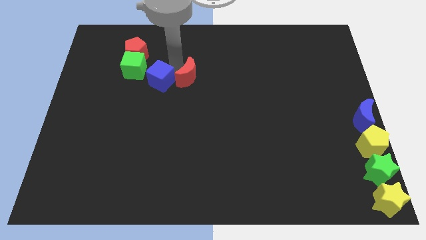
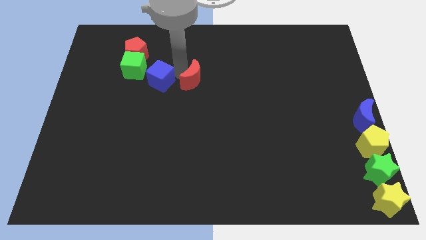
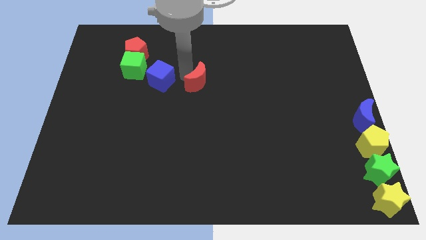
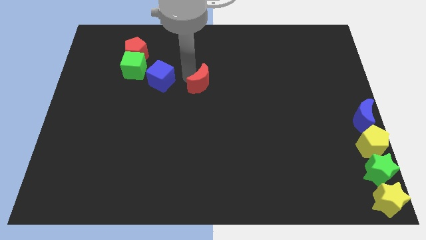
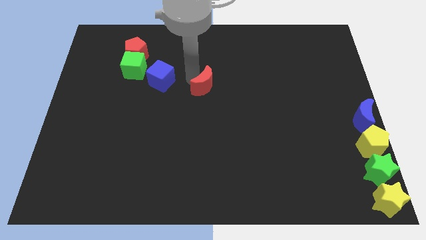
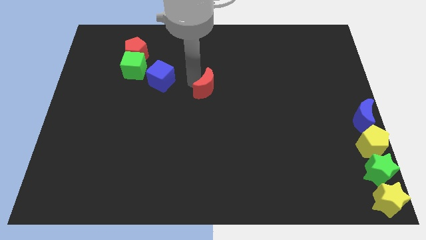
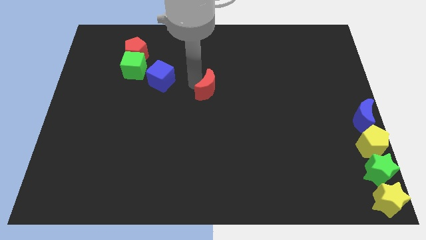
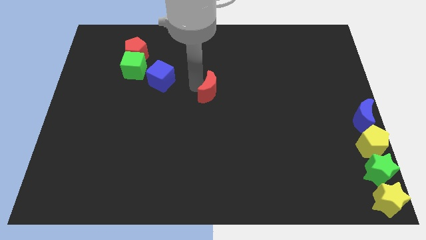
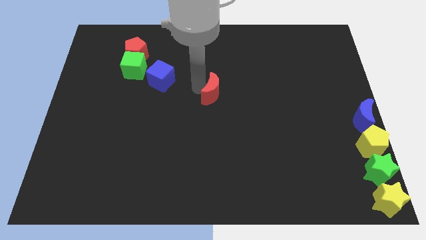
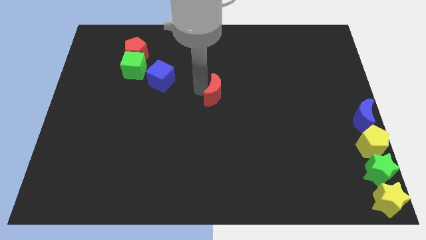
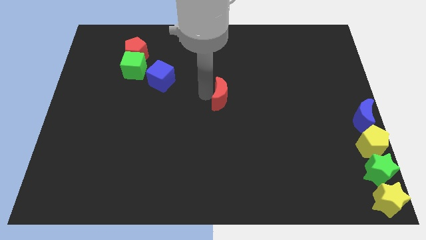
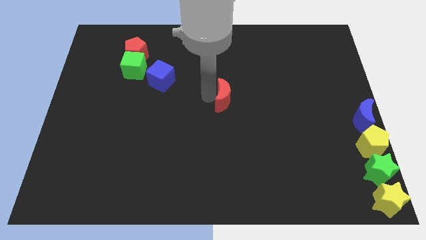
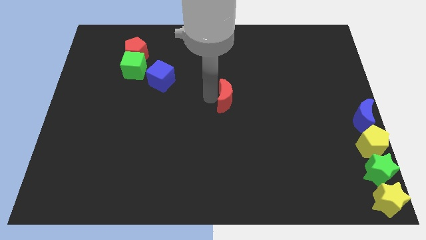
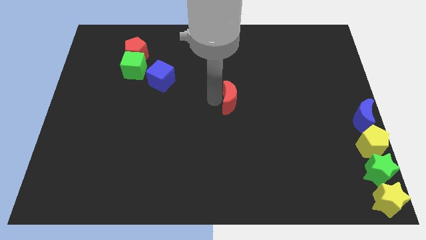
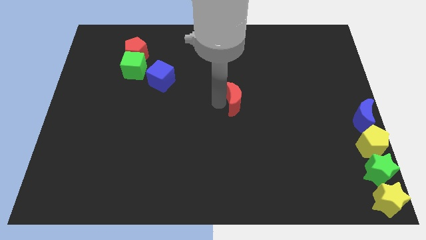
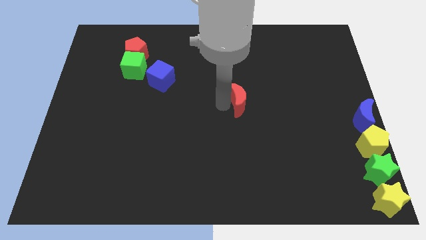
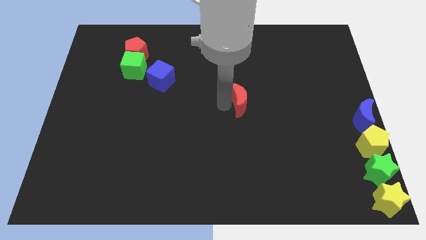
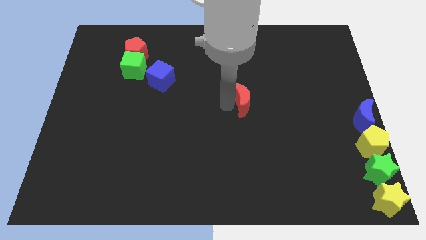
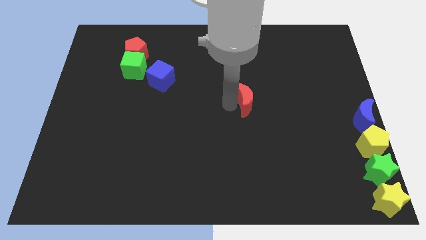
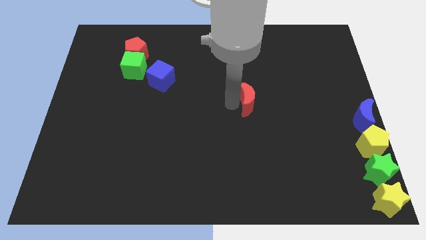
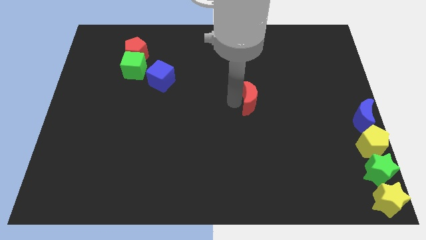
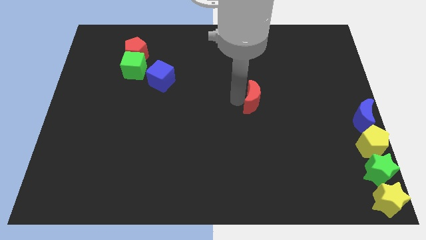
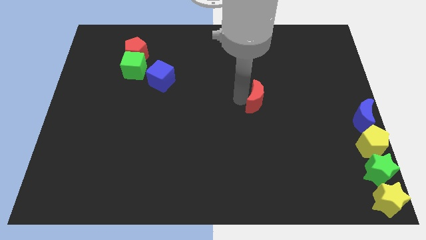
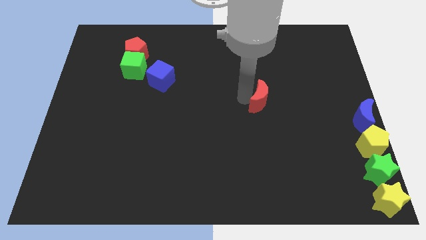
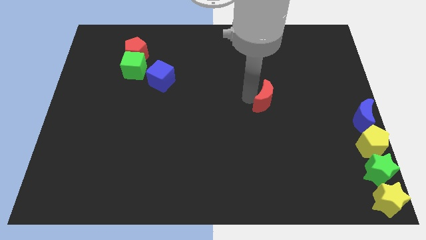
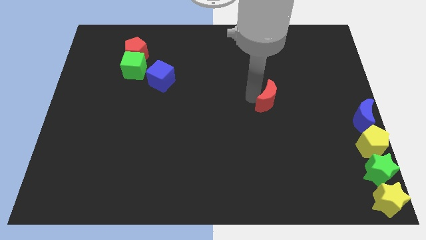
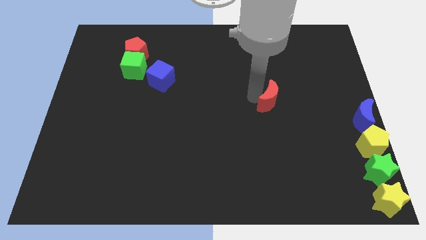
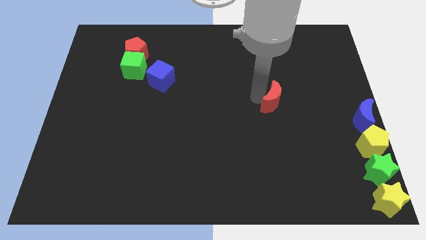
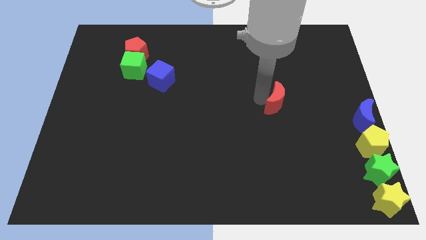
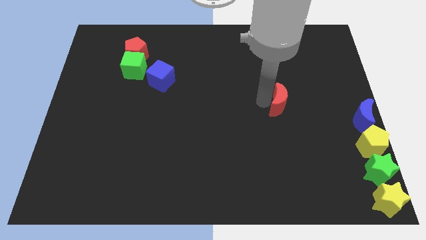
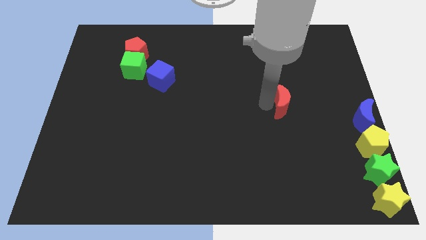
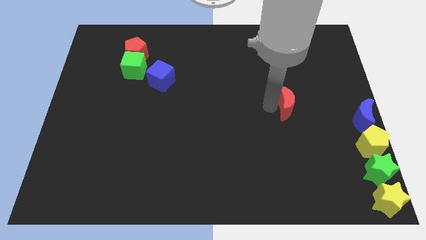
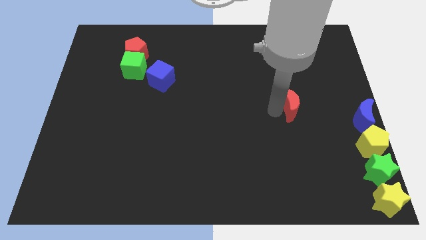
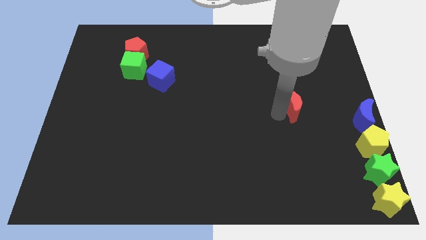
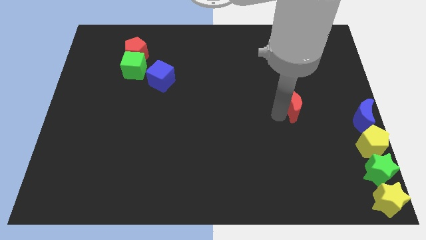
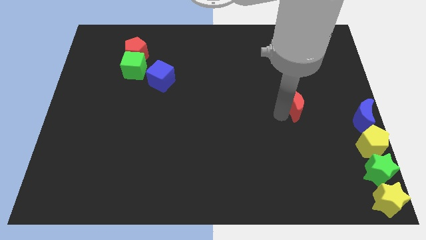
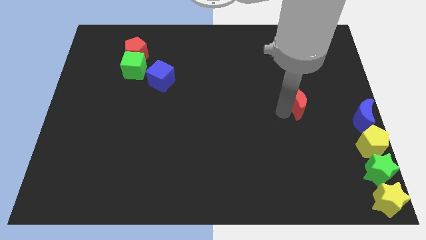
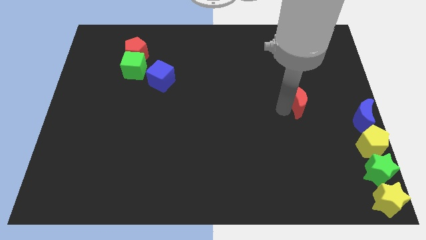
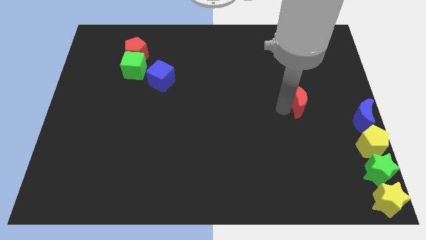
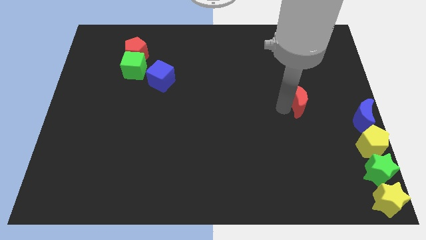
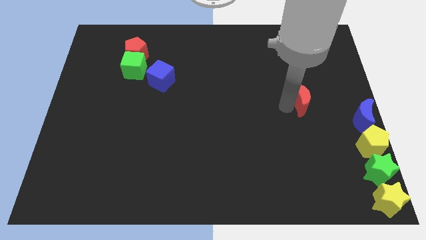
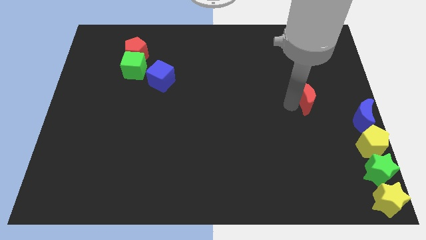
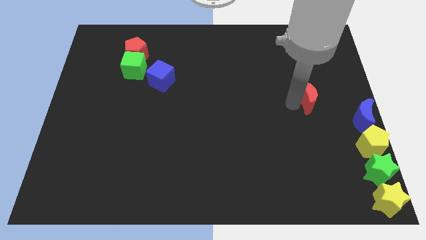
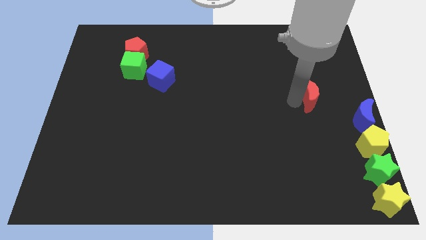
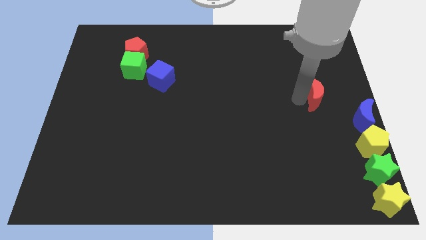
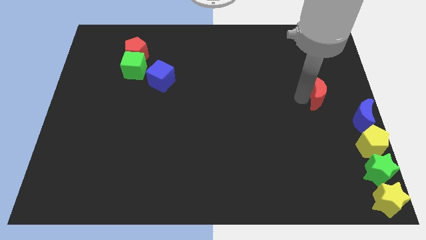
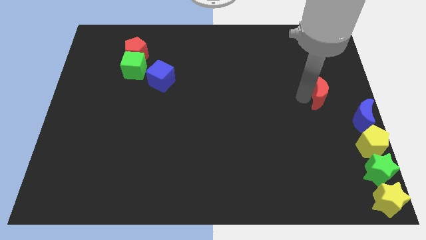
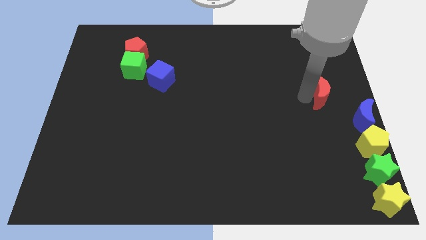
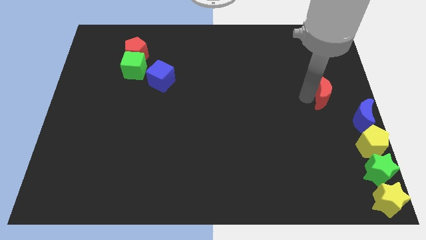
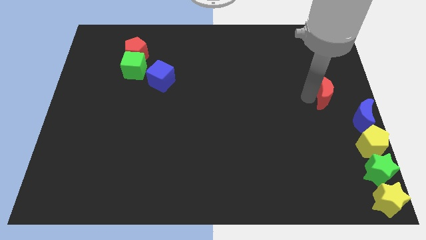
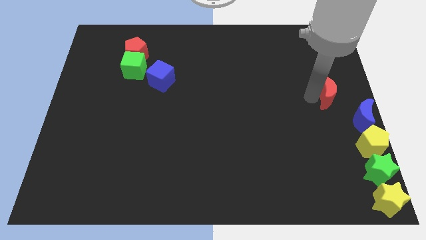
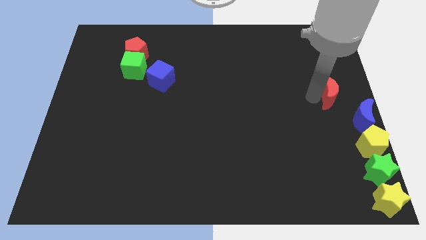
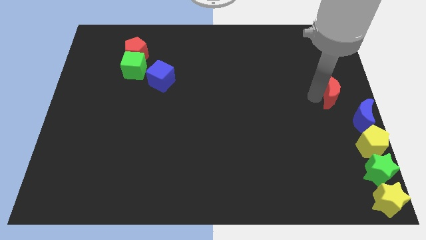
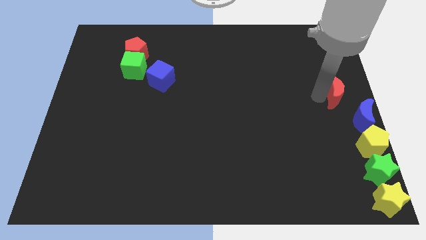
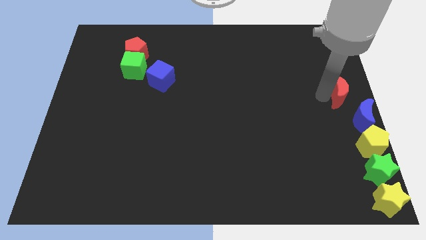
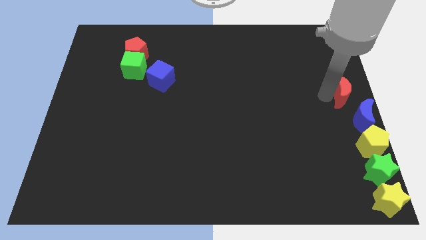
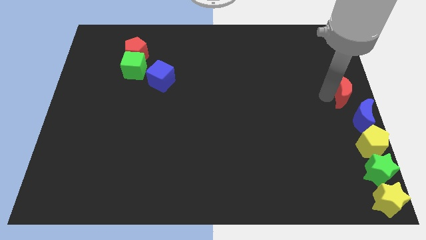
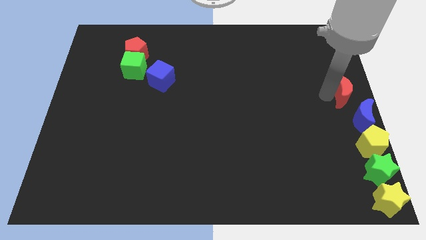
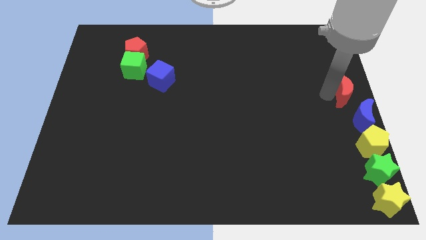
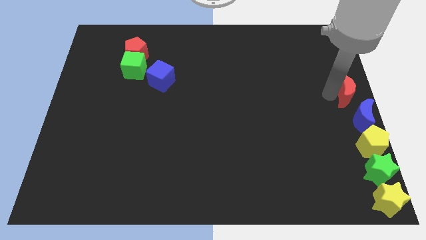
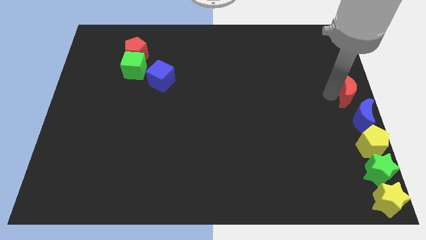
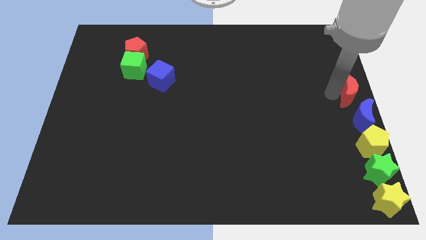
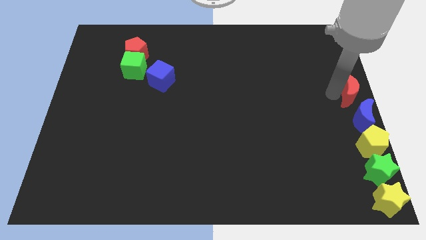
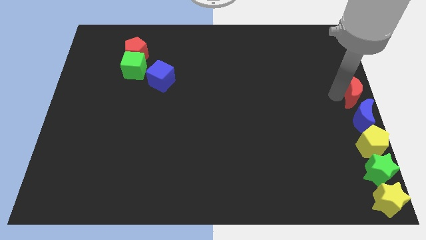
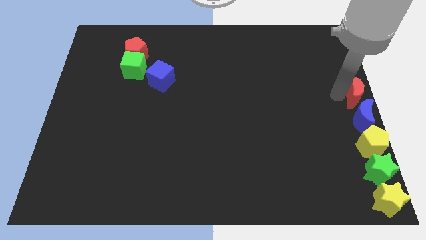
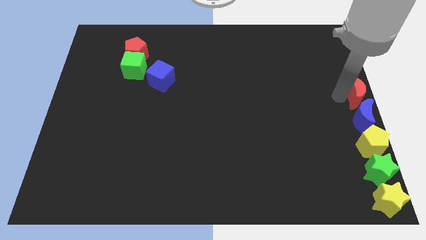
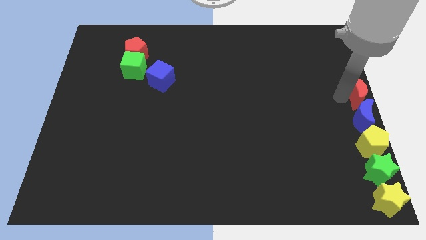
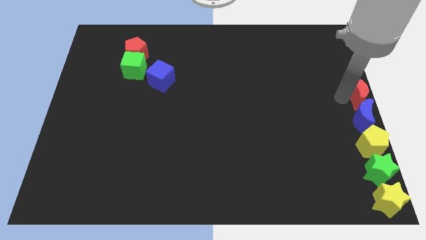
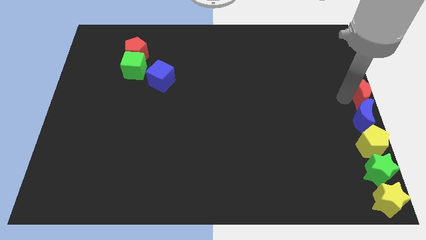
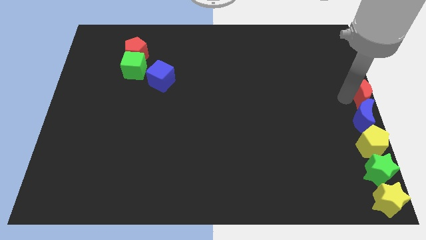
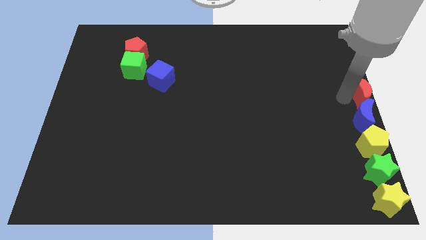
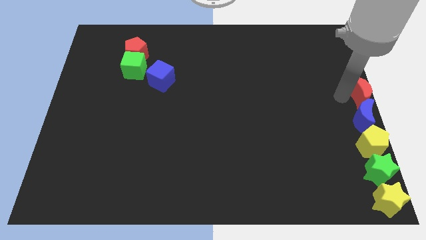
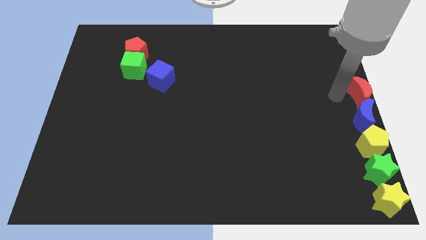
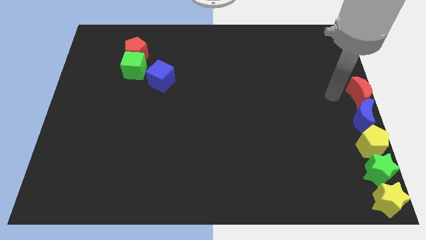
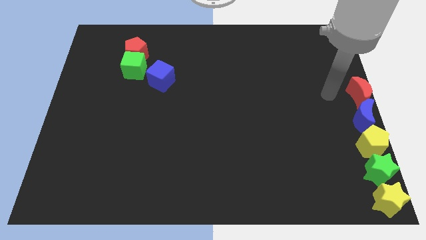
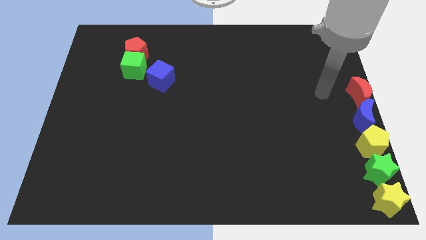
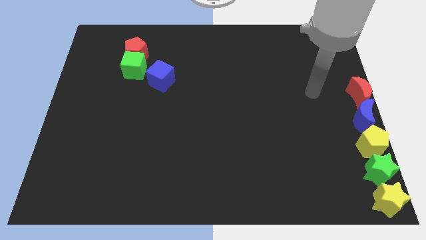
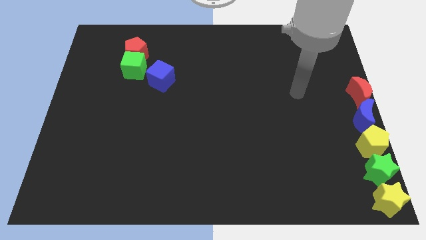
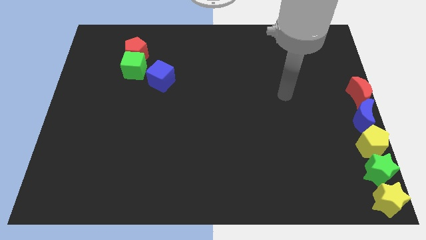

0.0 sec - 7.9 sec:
push the red crescent to the top of the blue crescent

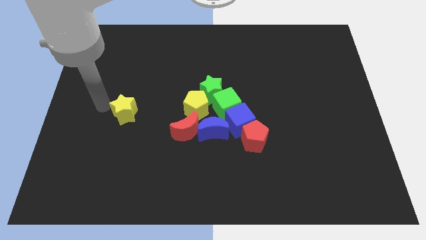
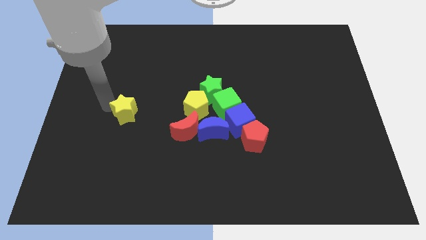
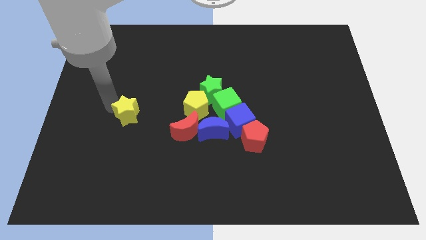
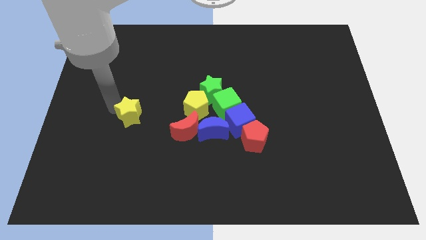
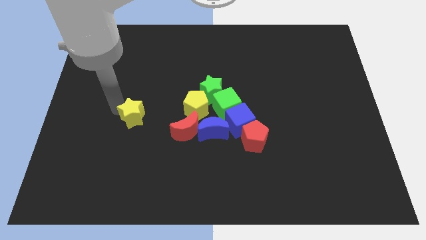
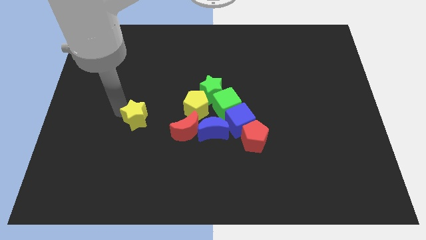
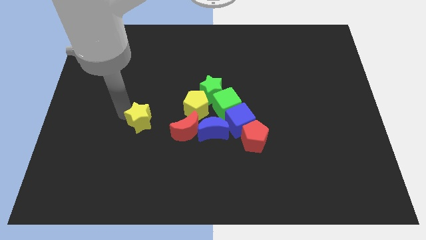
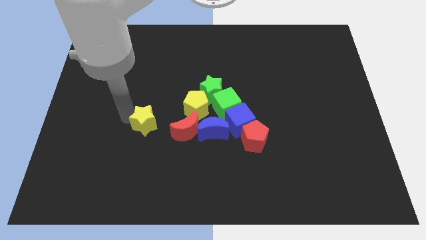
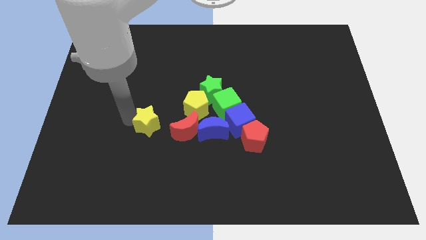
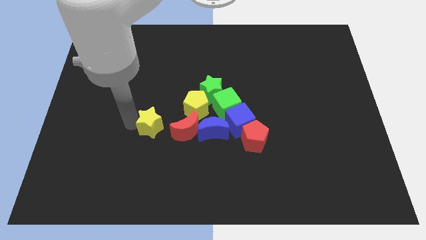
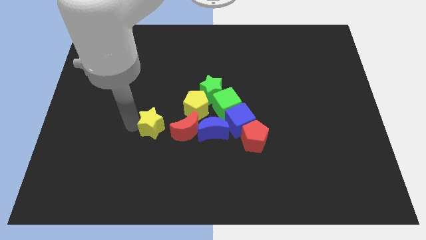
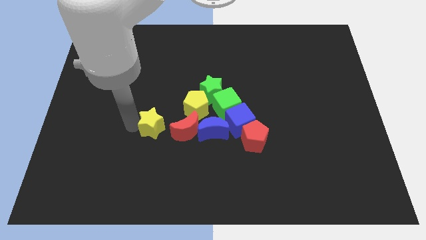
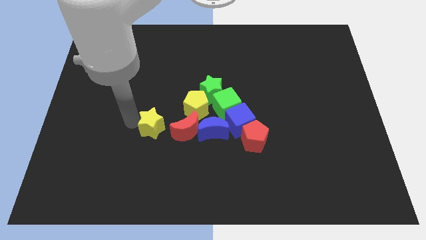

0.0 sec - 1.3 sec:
push the yellow star towards the group of blocks

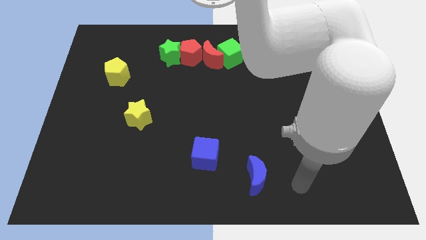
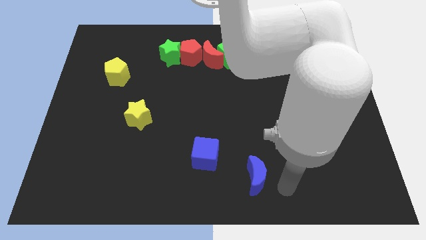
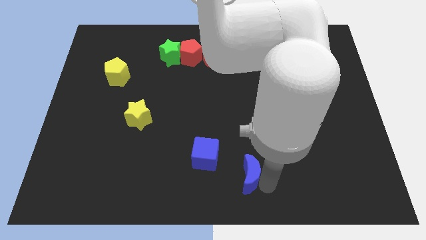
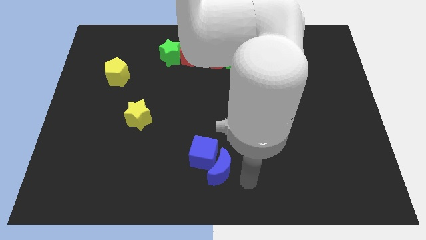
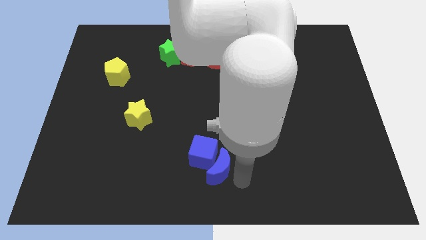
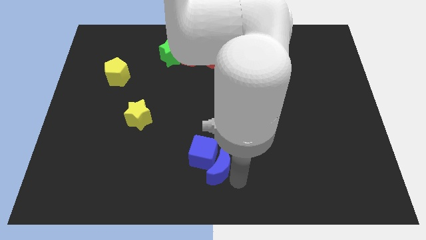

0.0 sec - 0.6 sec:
move the blue crescent into the blue cube
